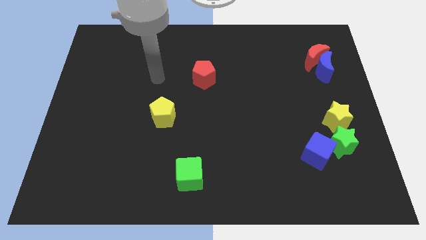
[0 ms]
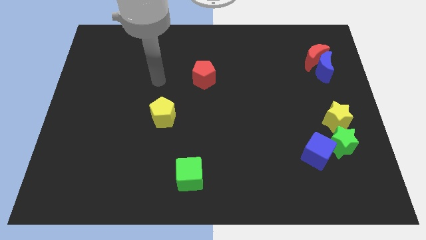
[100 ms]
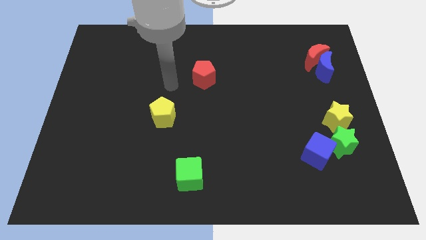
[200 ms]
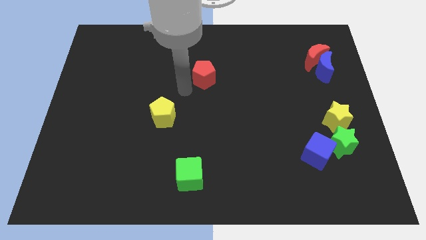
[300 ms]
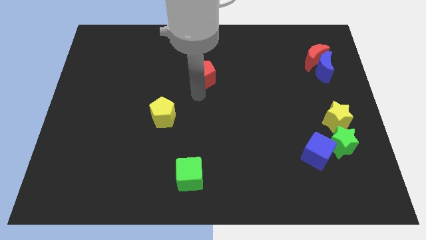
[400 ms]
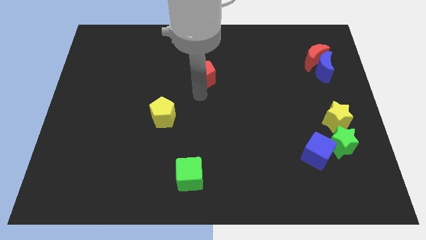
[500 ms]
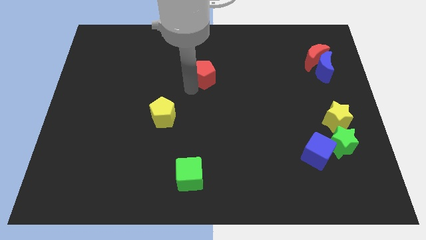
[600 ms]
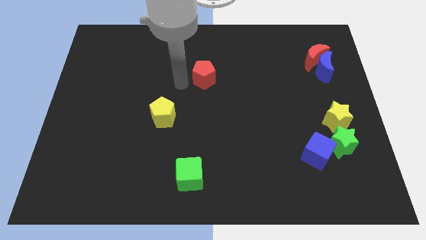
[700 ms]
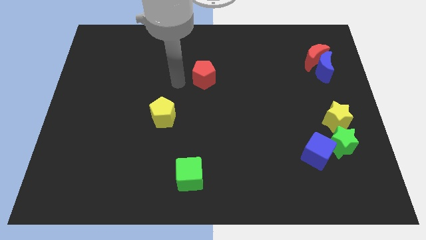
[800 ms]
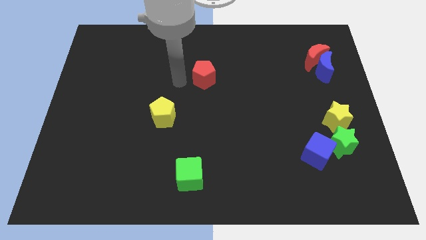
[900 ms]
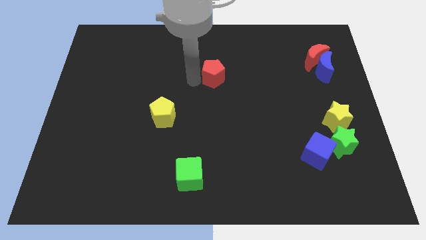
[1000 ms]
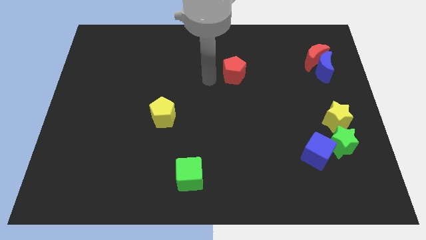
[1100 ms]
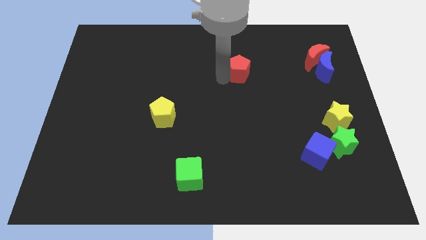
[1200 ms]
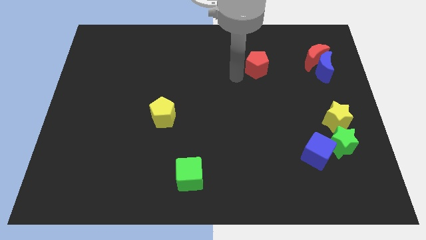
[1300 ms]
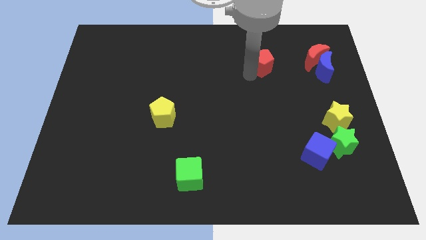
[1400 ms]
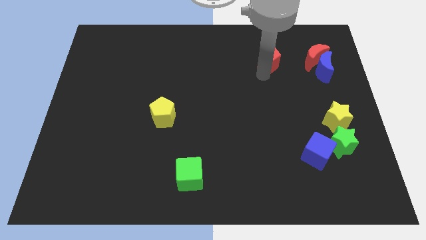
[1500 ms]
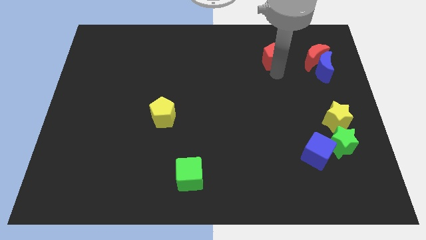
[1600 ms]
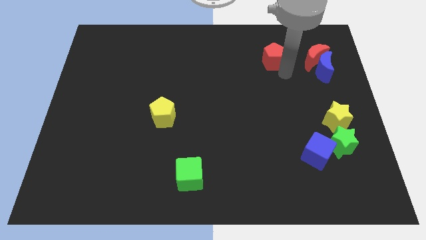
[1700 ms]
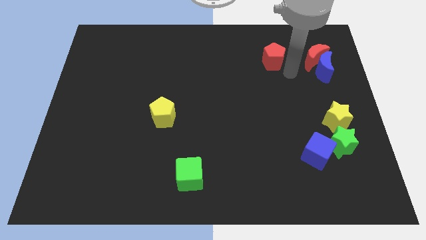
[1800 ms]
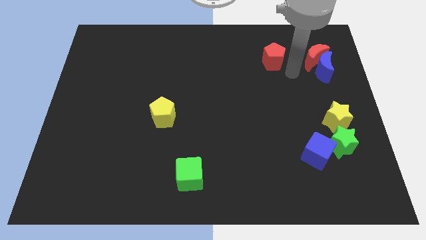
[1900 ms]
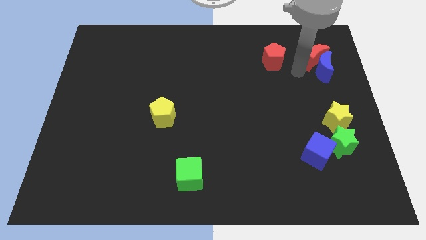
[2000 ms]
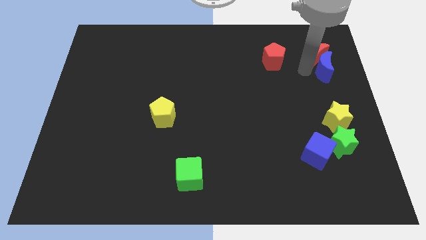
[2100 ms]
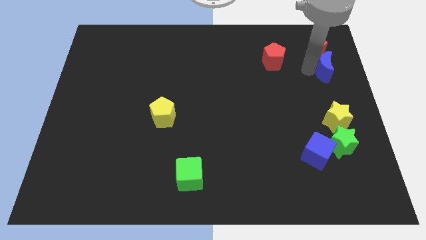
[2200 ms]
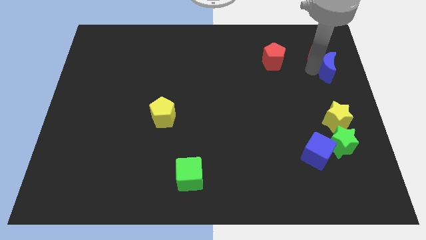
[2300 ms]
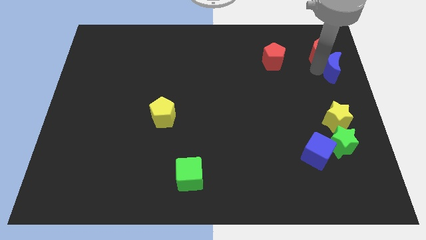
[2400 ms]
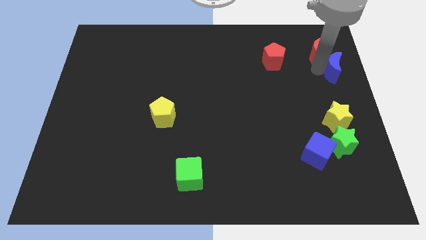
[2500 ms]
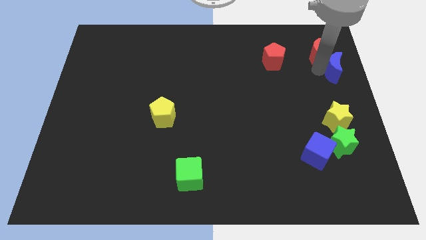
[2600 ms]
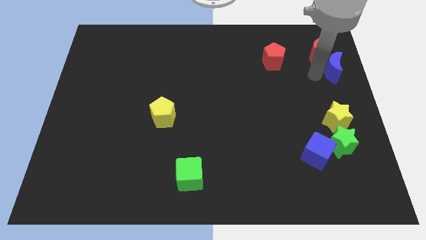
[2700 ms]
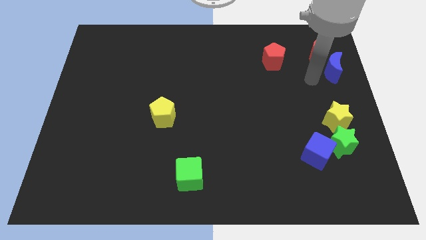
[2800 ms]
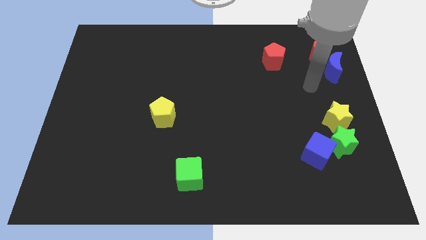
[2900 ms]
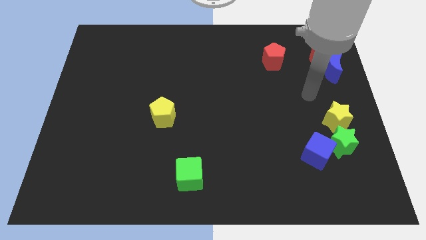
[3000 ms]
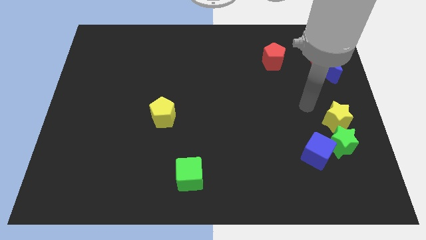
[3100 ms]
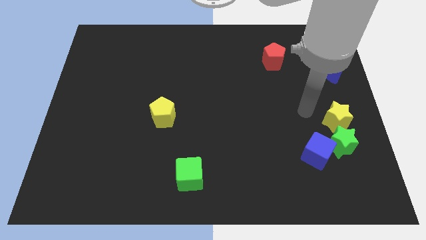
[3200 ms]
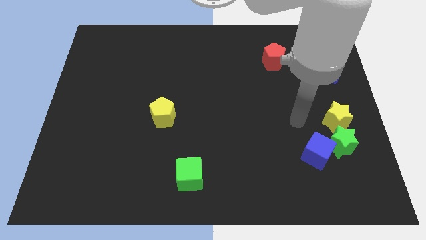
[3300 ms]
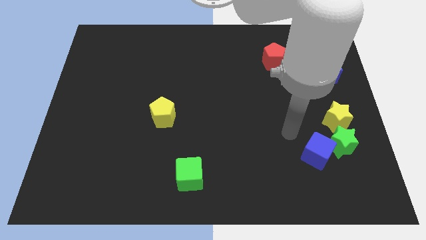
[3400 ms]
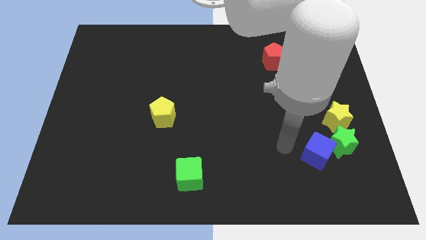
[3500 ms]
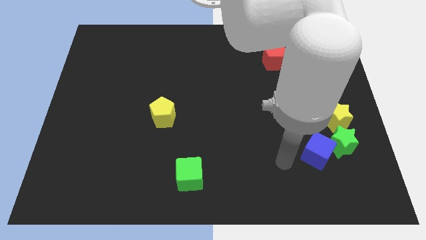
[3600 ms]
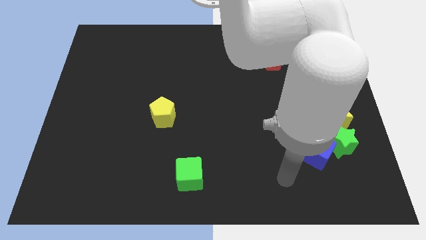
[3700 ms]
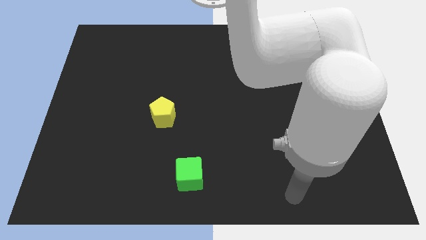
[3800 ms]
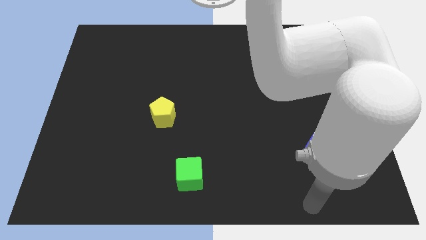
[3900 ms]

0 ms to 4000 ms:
move your arm to the bottom

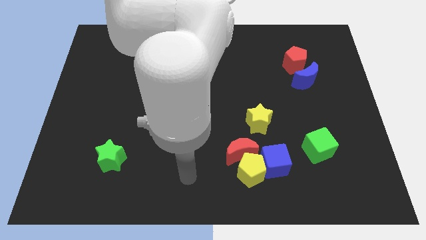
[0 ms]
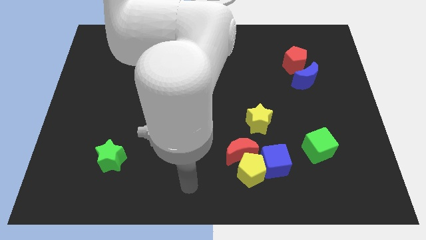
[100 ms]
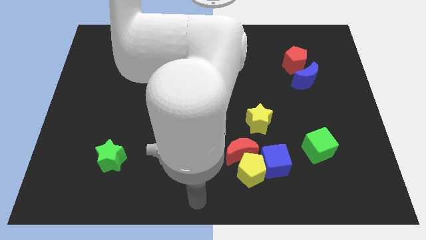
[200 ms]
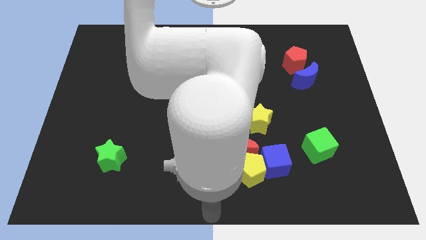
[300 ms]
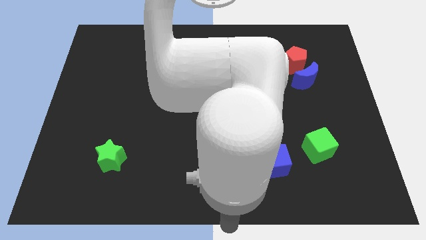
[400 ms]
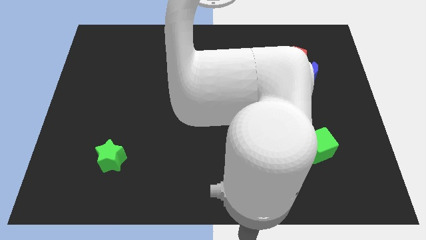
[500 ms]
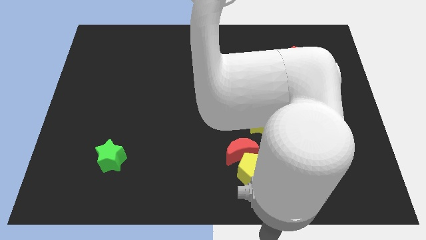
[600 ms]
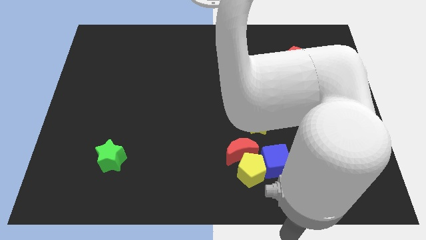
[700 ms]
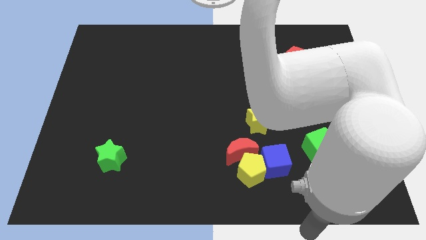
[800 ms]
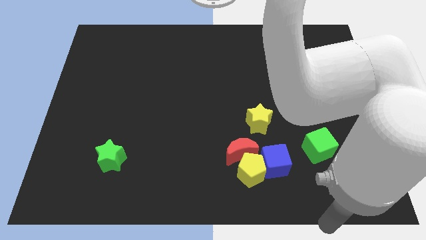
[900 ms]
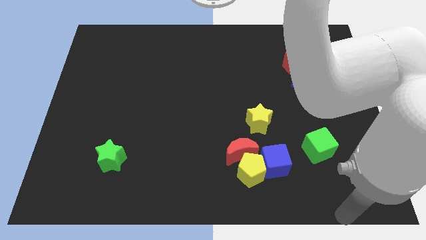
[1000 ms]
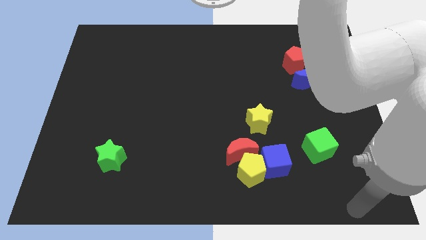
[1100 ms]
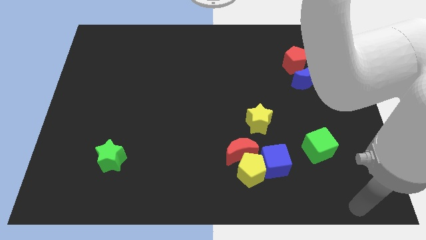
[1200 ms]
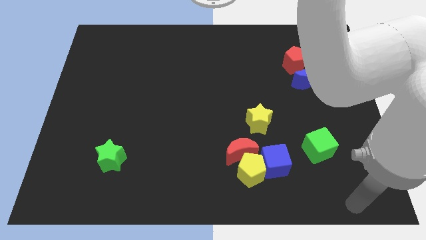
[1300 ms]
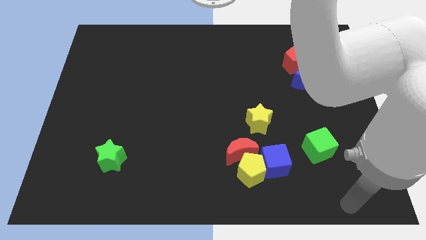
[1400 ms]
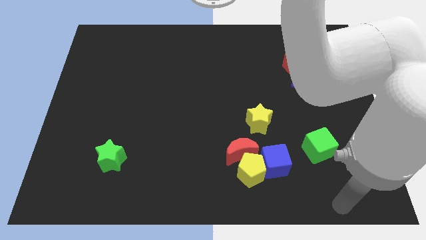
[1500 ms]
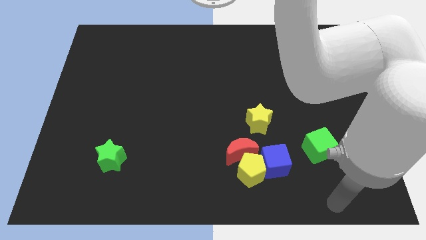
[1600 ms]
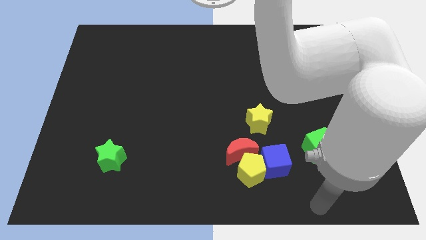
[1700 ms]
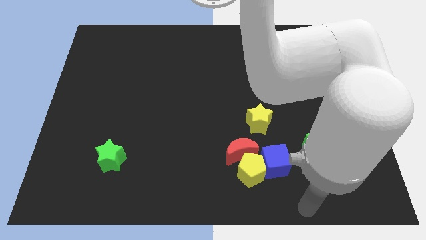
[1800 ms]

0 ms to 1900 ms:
move the arm towards the right bottom of the board

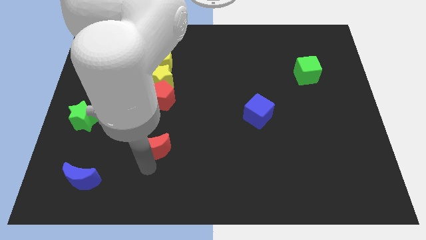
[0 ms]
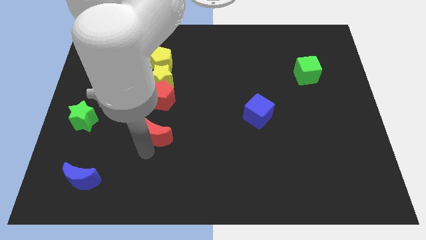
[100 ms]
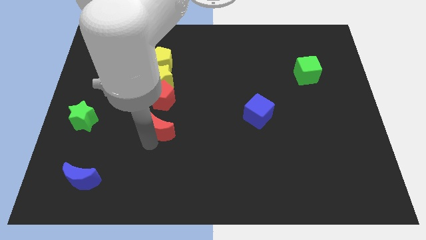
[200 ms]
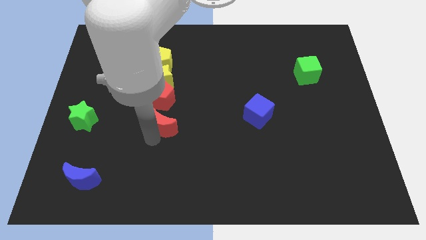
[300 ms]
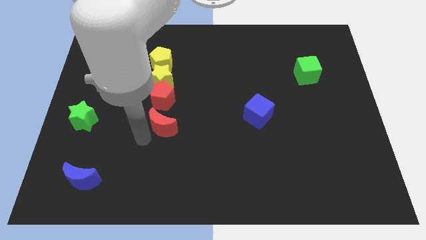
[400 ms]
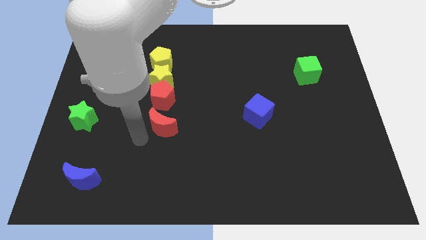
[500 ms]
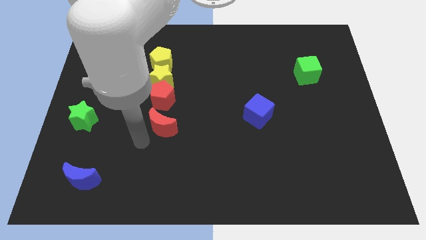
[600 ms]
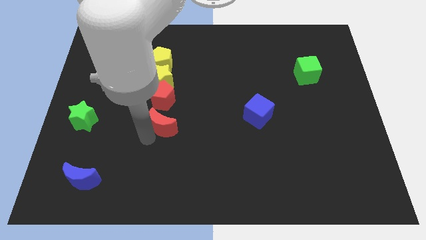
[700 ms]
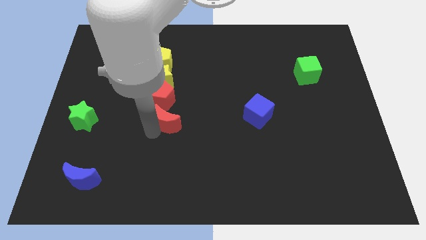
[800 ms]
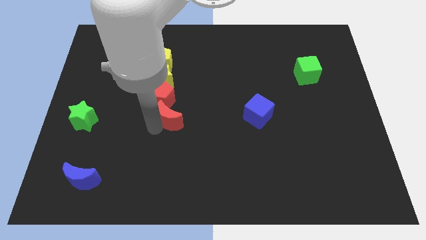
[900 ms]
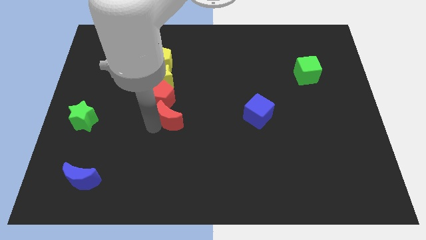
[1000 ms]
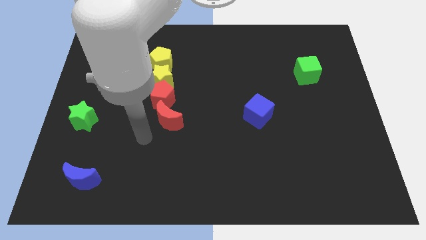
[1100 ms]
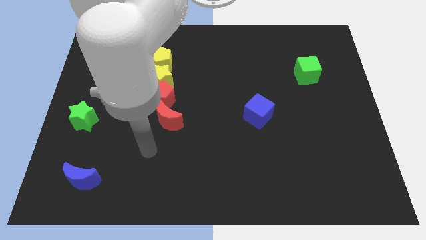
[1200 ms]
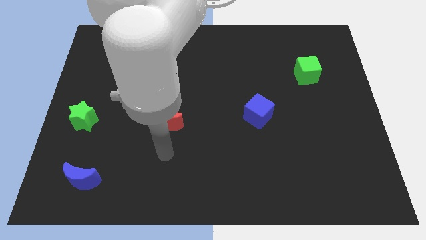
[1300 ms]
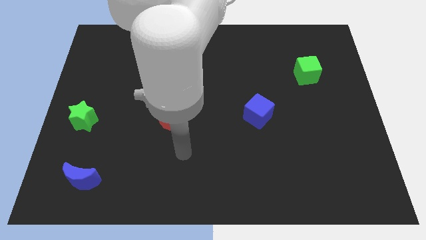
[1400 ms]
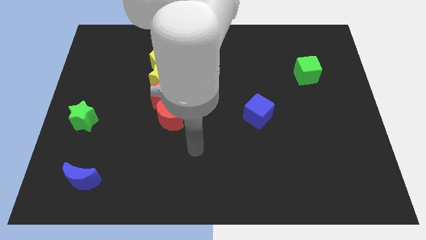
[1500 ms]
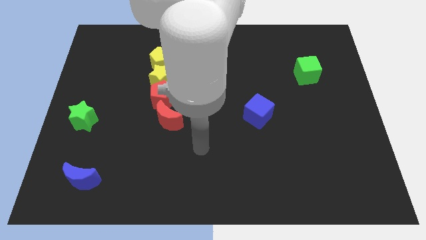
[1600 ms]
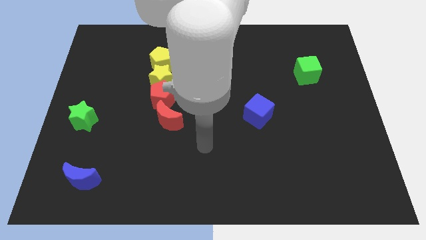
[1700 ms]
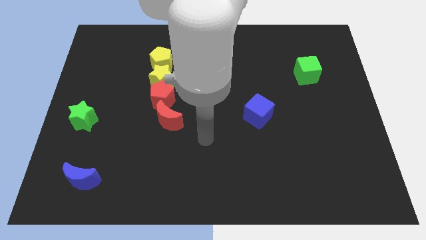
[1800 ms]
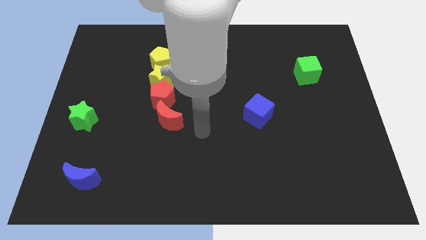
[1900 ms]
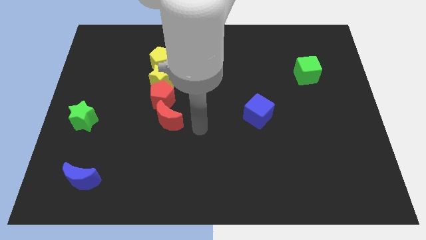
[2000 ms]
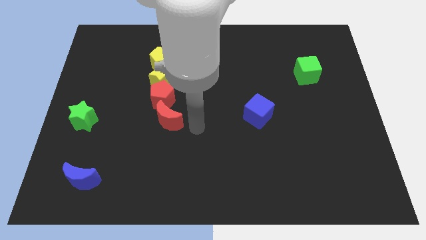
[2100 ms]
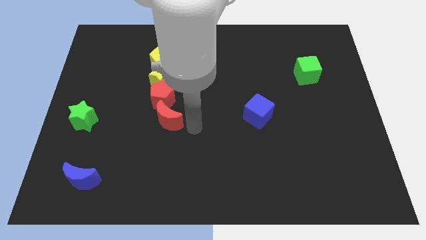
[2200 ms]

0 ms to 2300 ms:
put the red crescent and red pentagon together

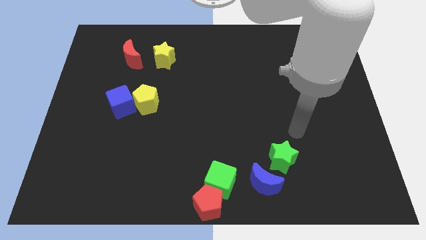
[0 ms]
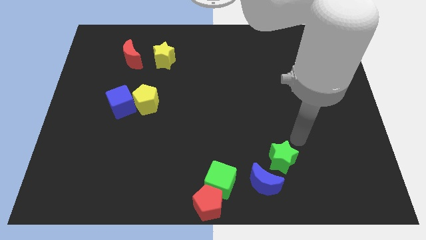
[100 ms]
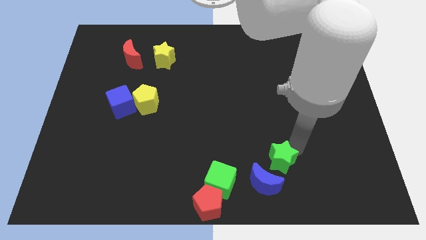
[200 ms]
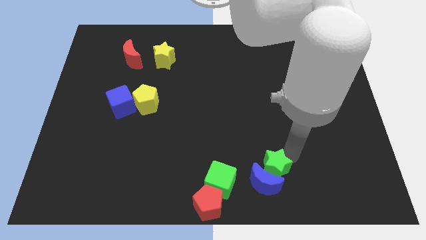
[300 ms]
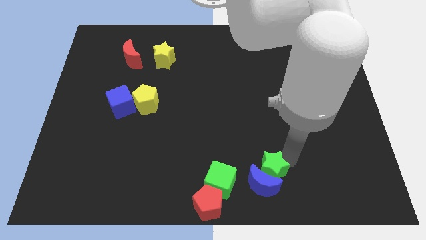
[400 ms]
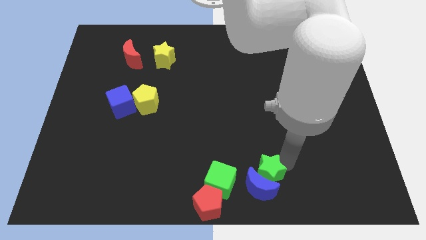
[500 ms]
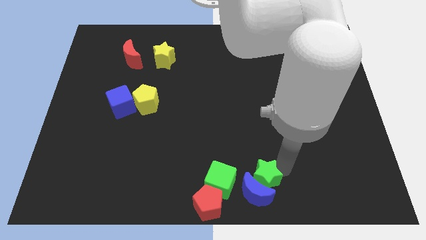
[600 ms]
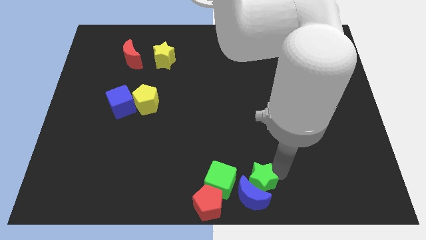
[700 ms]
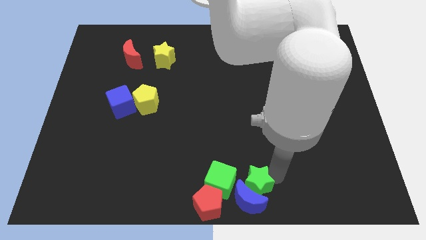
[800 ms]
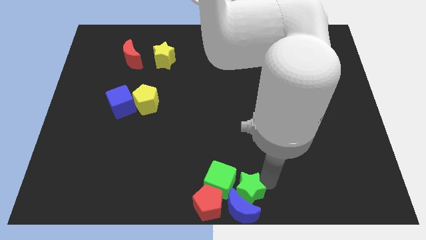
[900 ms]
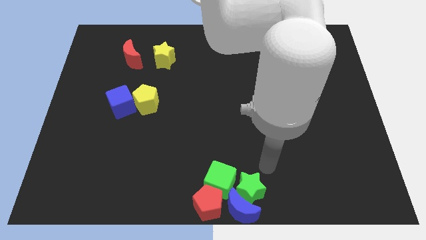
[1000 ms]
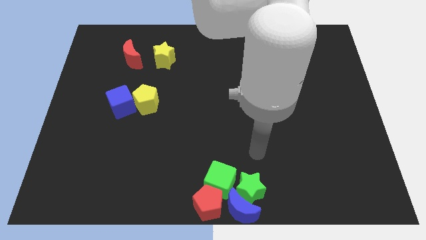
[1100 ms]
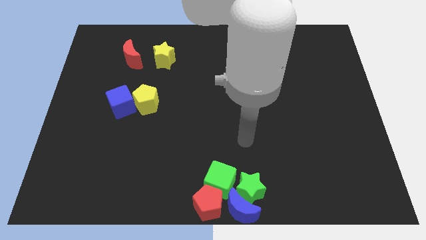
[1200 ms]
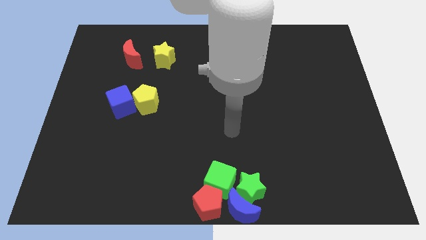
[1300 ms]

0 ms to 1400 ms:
slide the green star and blue moon to bottom center
